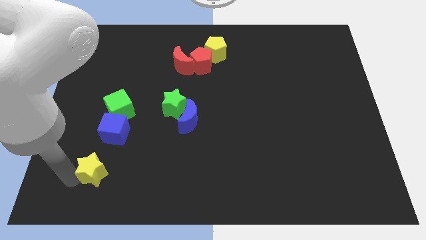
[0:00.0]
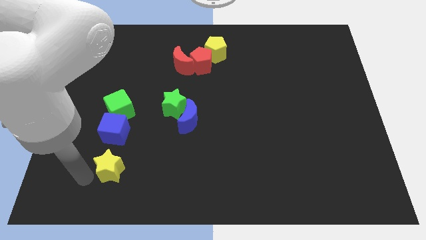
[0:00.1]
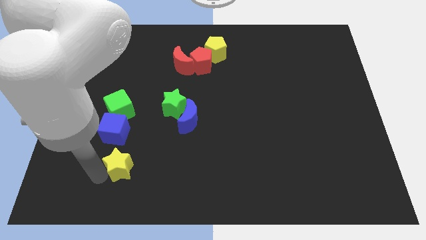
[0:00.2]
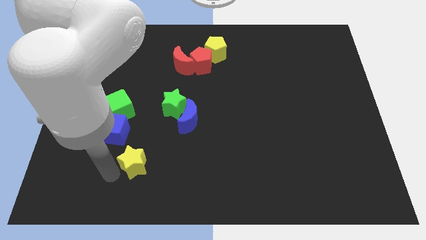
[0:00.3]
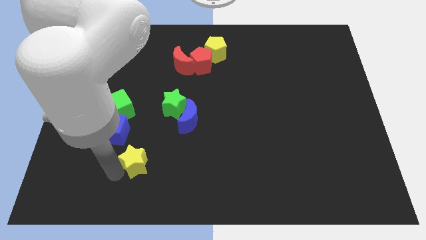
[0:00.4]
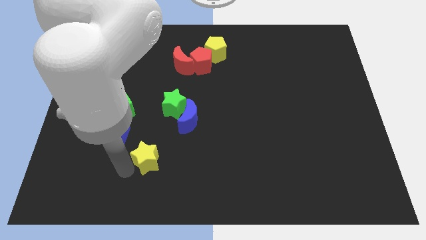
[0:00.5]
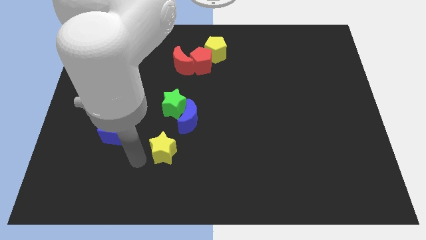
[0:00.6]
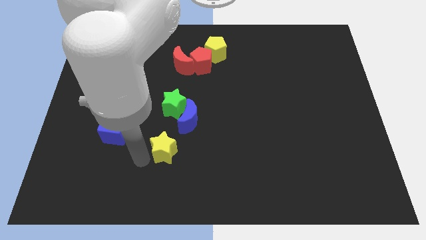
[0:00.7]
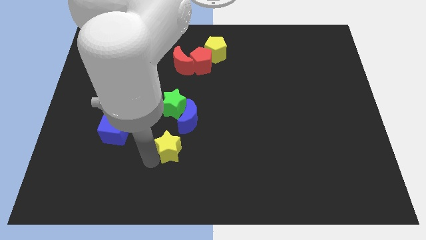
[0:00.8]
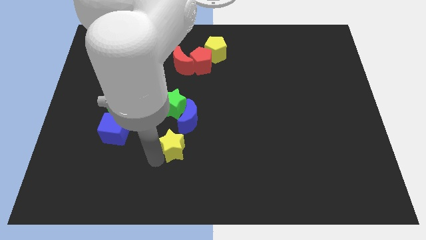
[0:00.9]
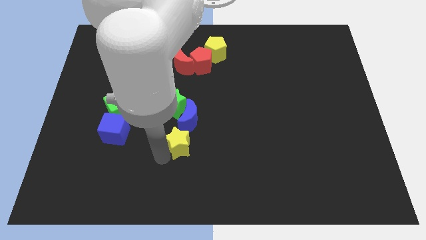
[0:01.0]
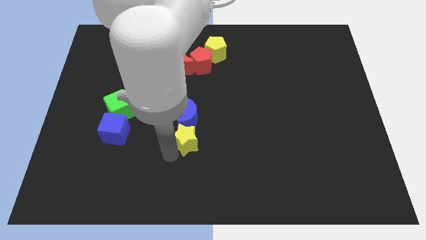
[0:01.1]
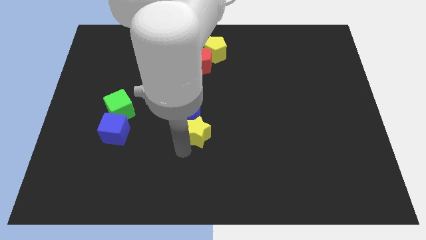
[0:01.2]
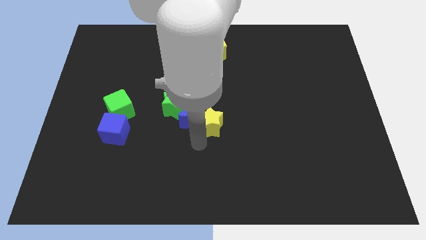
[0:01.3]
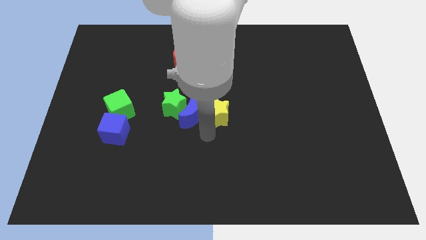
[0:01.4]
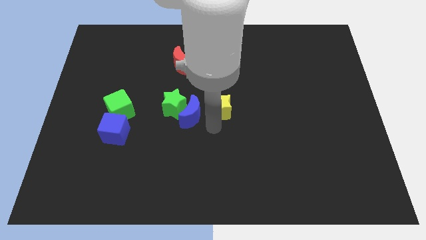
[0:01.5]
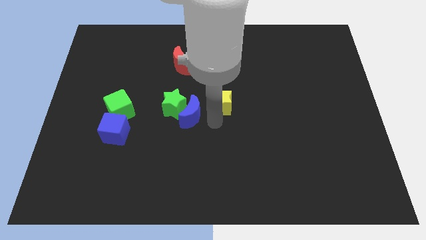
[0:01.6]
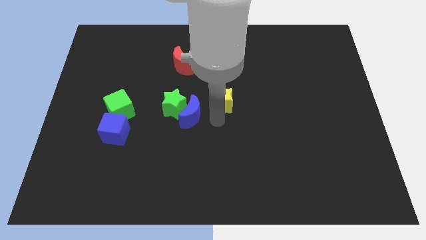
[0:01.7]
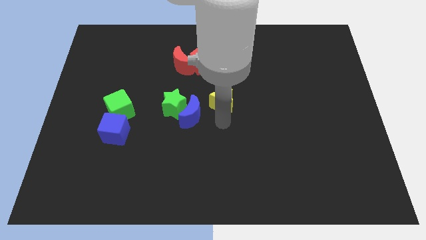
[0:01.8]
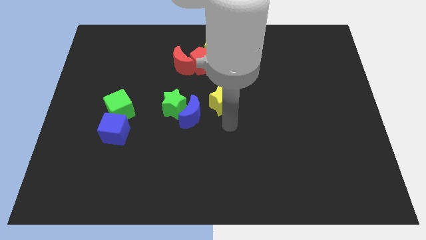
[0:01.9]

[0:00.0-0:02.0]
move the yellow star to the right of blue moon

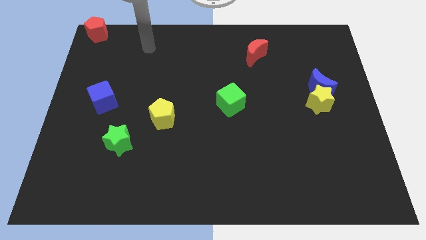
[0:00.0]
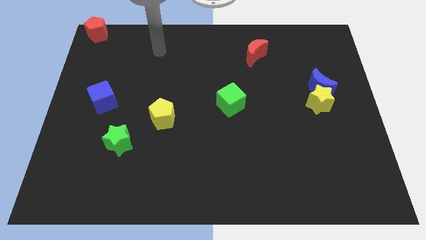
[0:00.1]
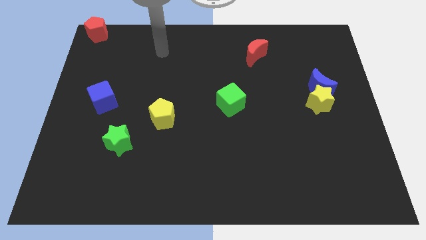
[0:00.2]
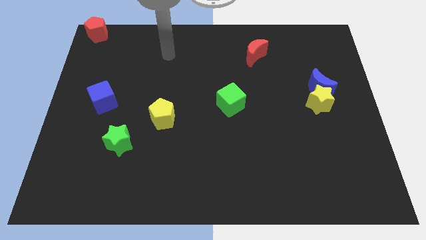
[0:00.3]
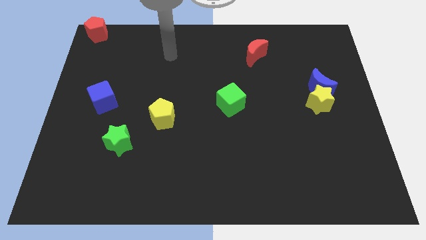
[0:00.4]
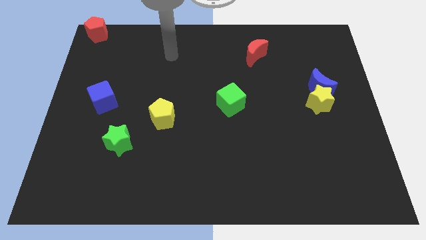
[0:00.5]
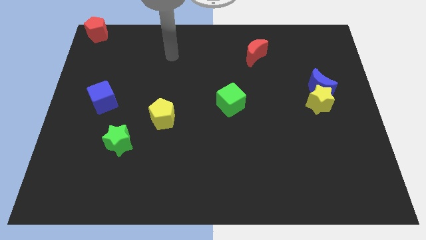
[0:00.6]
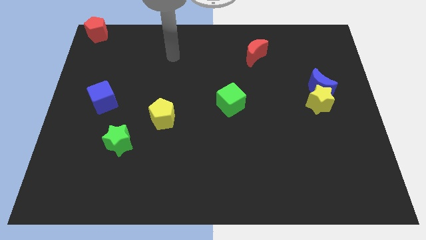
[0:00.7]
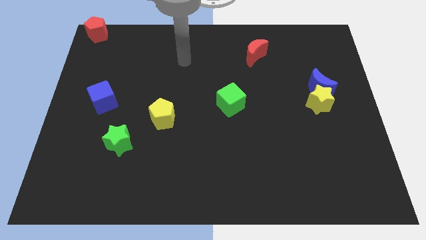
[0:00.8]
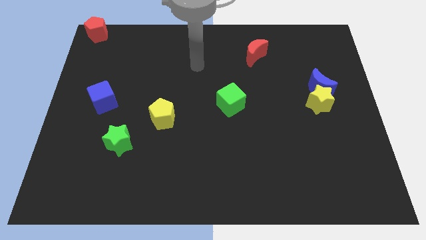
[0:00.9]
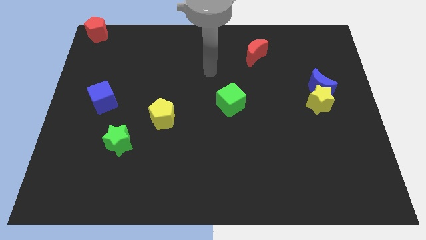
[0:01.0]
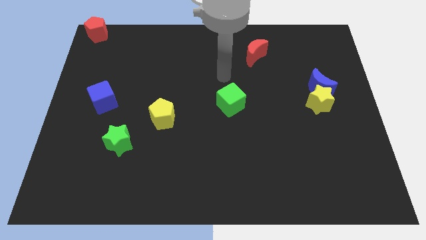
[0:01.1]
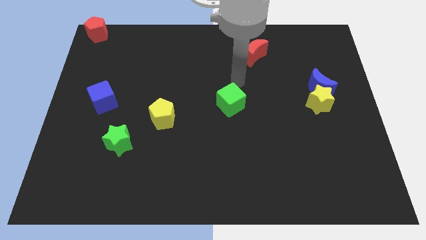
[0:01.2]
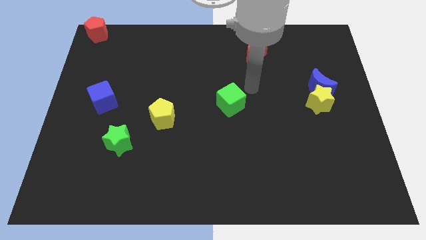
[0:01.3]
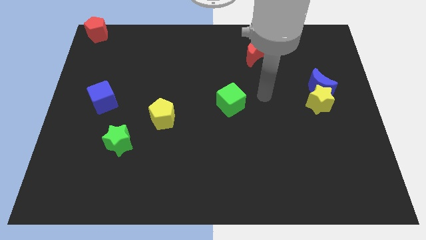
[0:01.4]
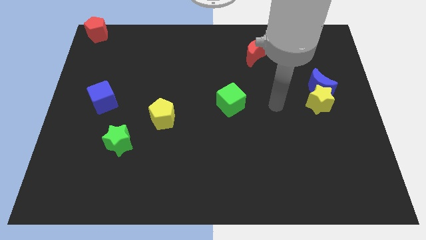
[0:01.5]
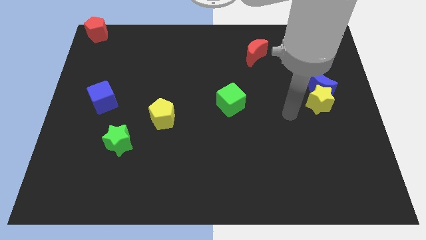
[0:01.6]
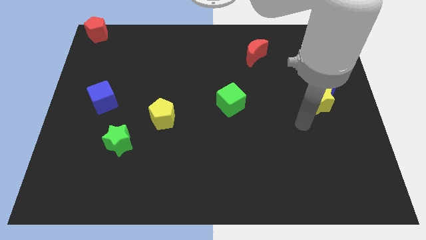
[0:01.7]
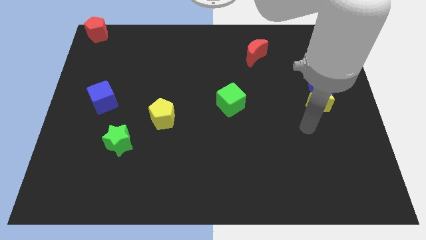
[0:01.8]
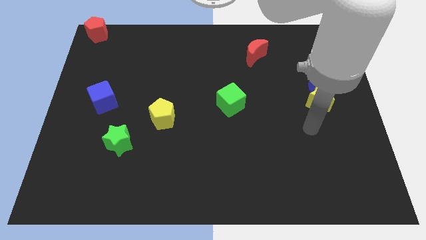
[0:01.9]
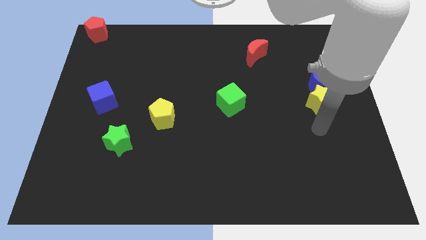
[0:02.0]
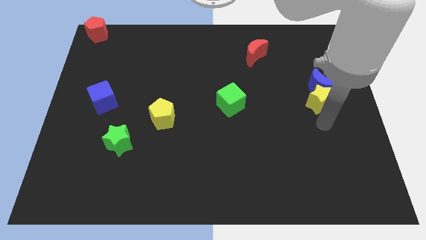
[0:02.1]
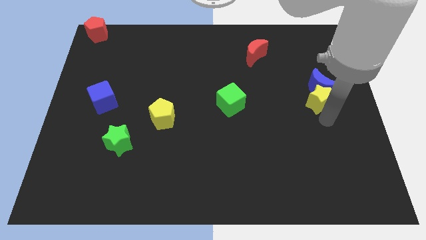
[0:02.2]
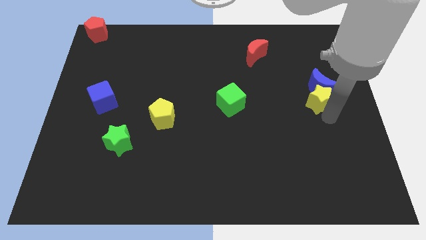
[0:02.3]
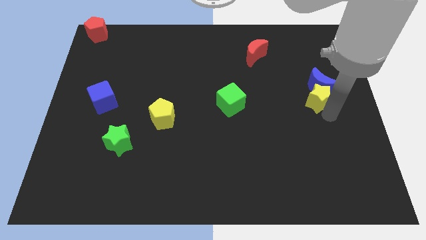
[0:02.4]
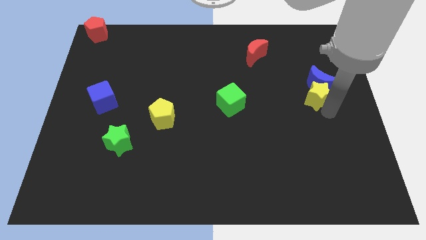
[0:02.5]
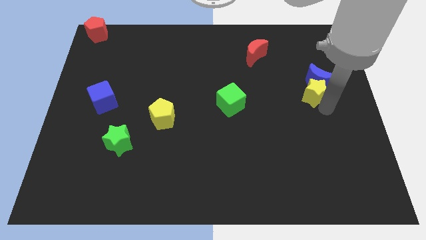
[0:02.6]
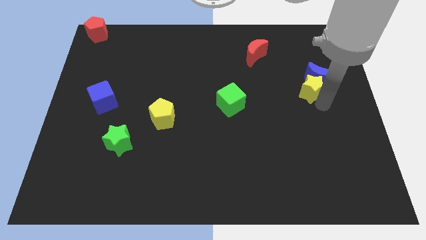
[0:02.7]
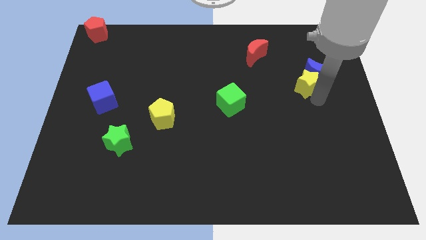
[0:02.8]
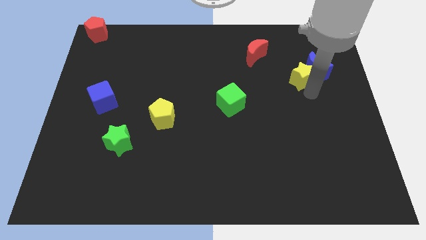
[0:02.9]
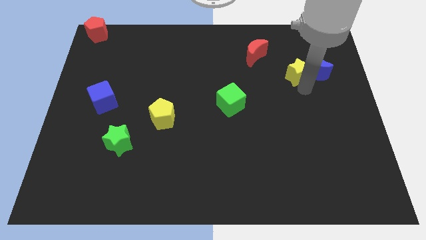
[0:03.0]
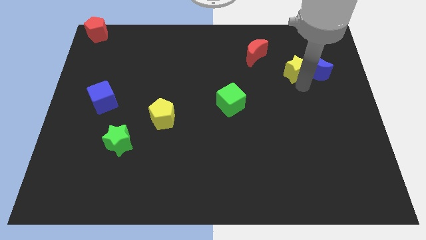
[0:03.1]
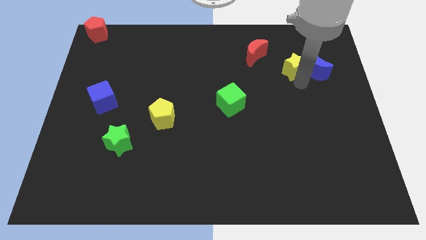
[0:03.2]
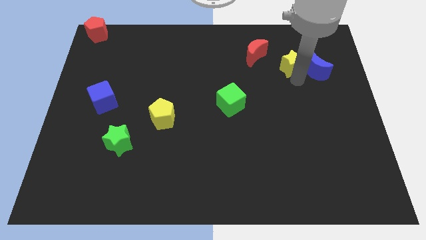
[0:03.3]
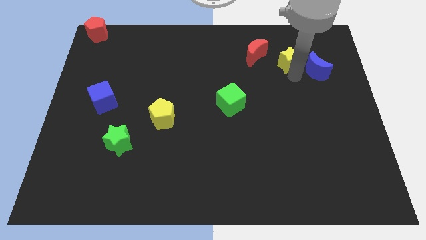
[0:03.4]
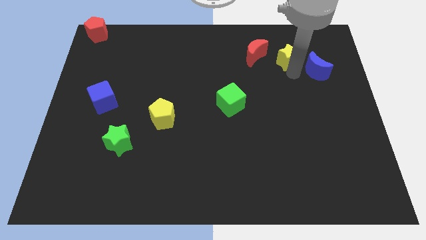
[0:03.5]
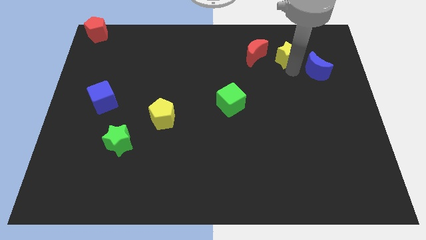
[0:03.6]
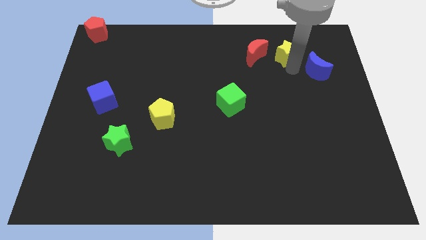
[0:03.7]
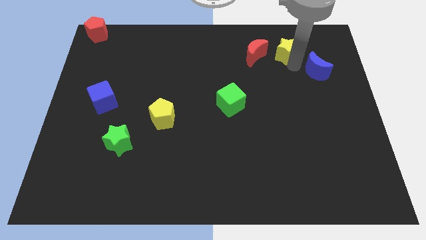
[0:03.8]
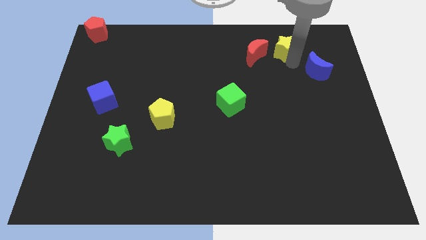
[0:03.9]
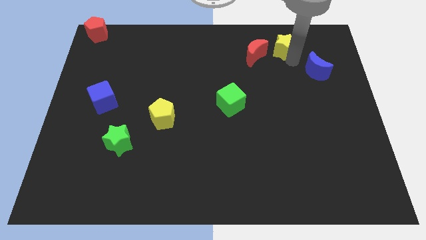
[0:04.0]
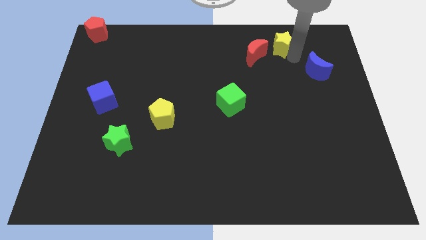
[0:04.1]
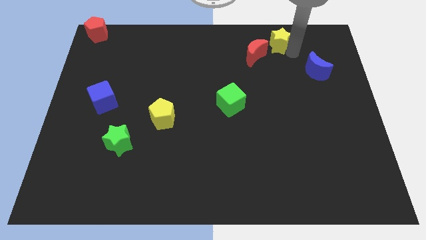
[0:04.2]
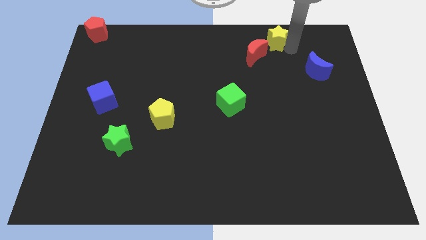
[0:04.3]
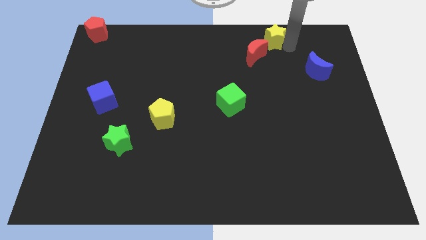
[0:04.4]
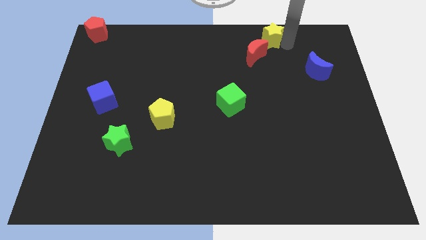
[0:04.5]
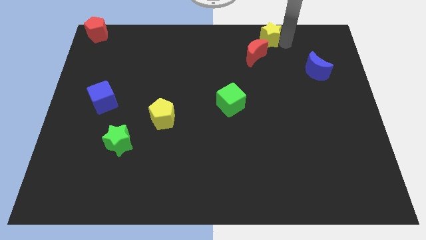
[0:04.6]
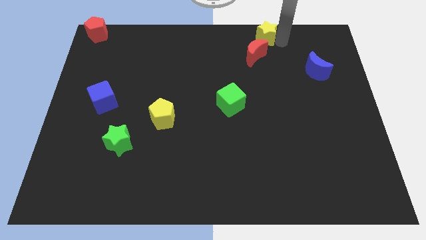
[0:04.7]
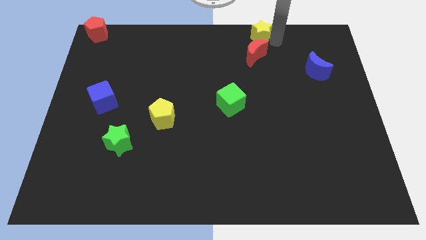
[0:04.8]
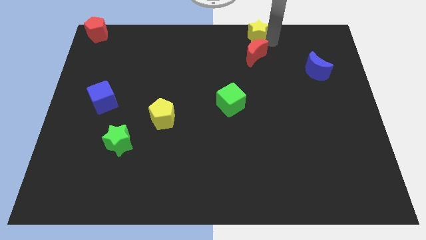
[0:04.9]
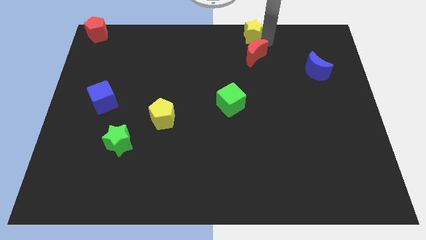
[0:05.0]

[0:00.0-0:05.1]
place the yellow star vertically above the red moon

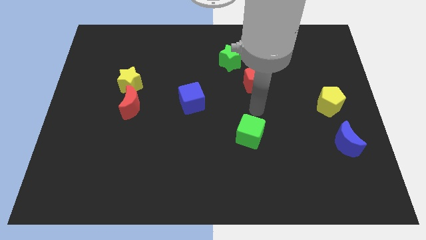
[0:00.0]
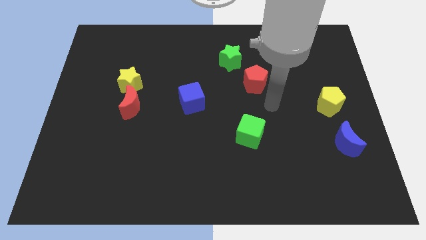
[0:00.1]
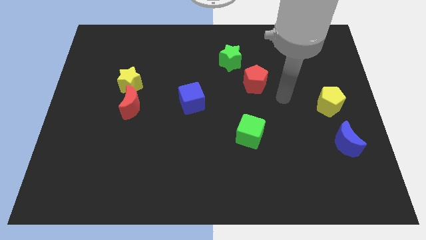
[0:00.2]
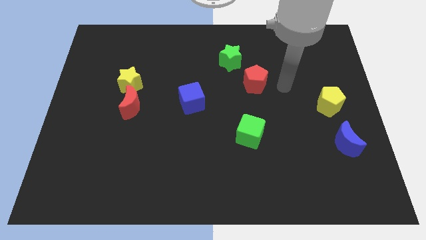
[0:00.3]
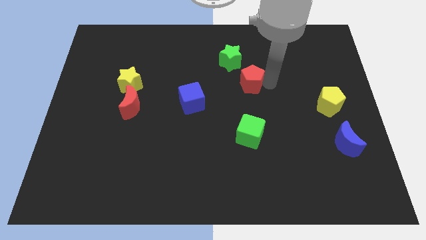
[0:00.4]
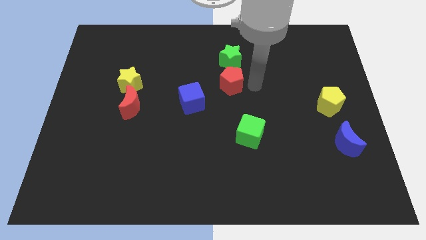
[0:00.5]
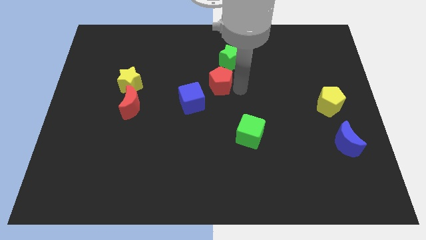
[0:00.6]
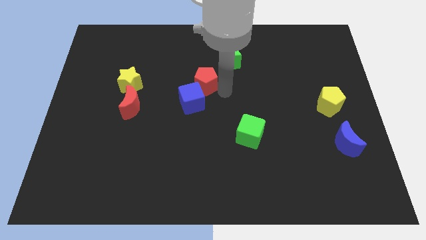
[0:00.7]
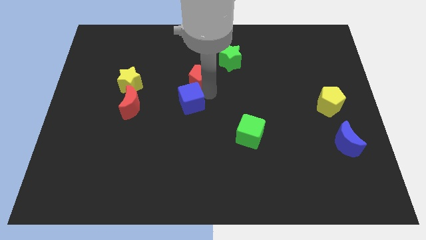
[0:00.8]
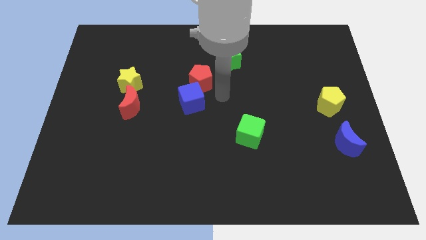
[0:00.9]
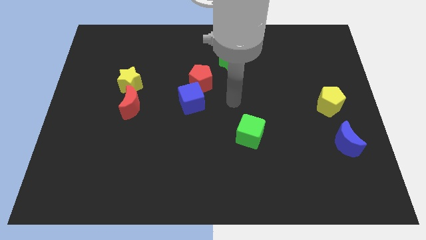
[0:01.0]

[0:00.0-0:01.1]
move the red pentagon close to the blue cube

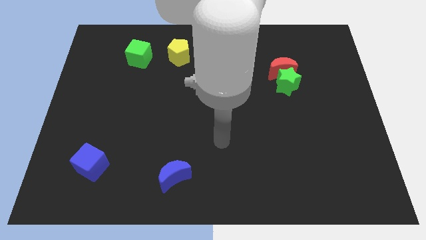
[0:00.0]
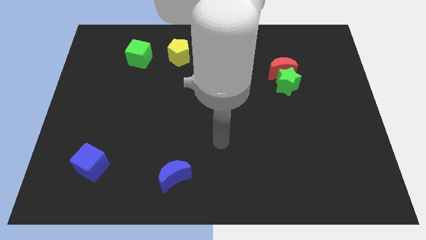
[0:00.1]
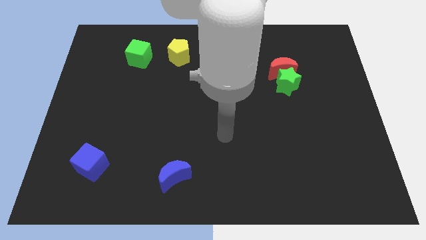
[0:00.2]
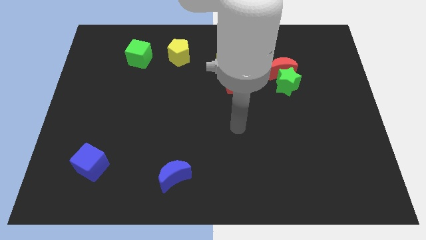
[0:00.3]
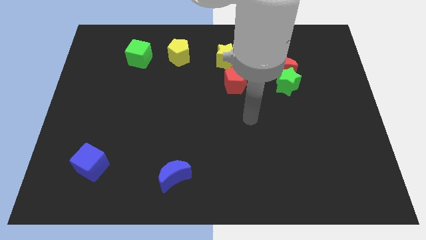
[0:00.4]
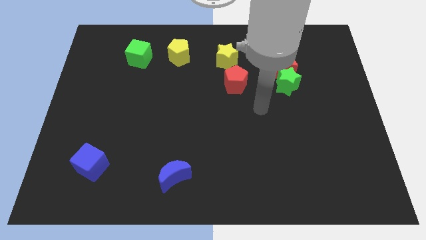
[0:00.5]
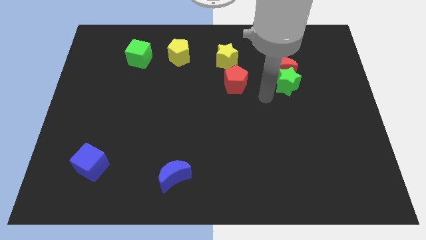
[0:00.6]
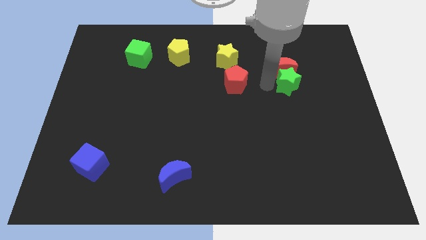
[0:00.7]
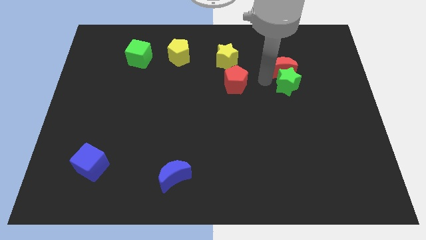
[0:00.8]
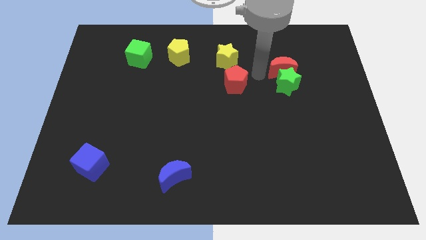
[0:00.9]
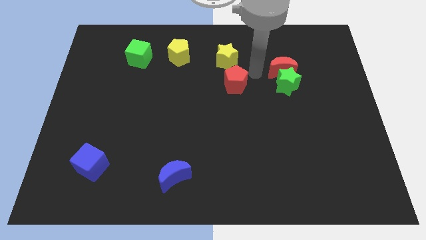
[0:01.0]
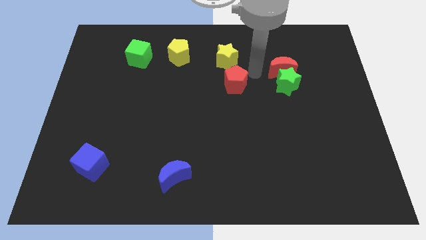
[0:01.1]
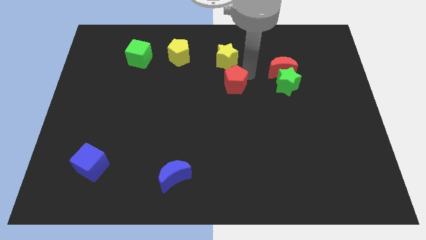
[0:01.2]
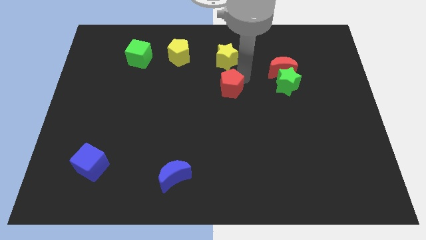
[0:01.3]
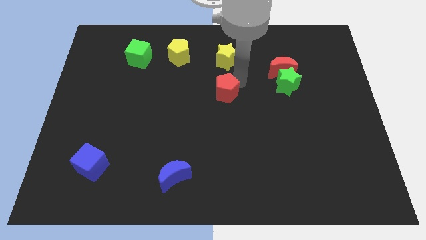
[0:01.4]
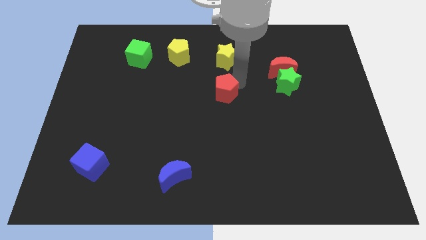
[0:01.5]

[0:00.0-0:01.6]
push the red pentagon downwards
